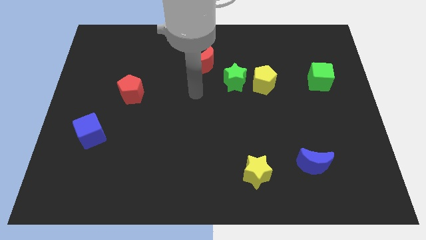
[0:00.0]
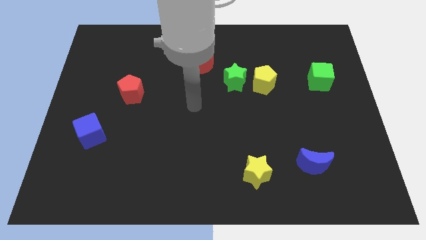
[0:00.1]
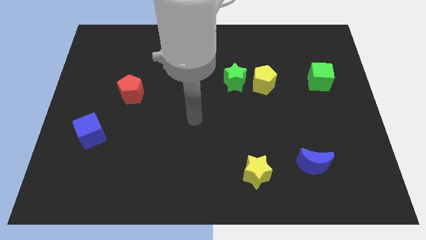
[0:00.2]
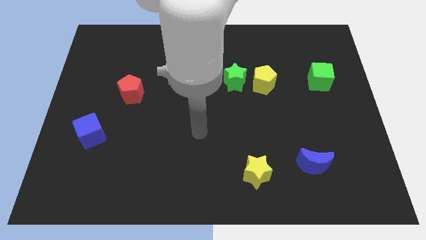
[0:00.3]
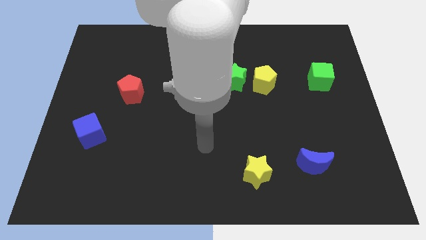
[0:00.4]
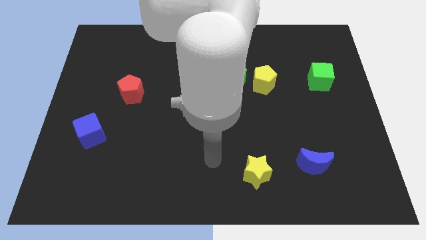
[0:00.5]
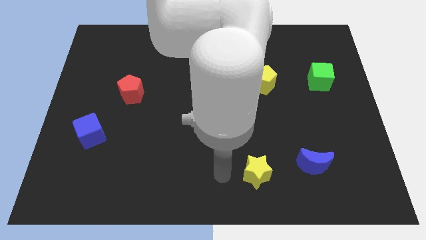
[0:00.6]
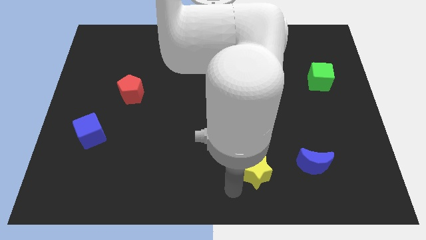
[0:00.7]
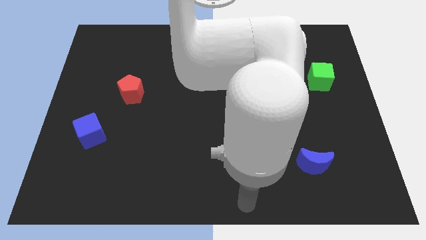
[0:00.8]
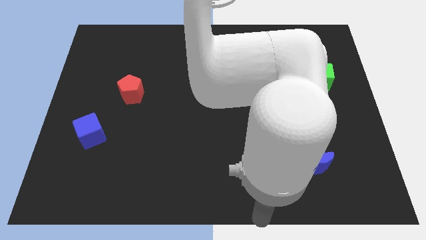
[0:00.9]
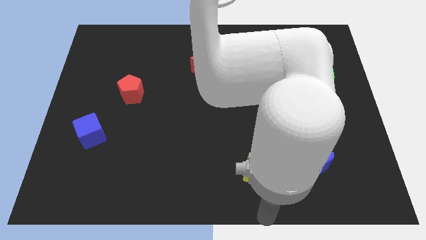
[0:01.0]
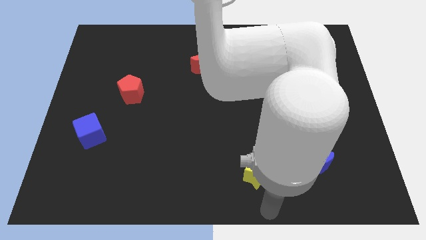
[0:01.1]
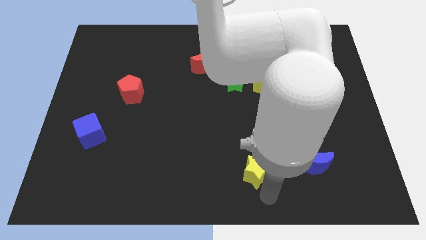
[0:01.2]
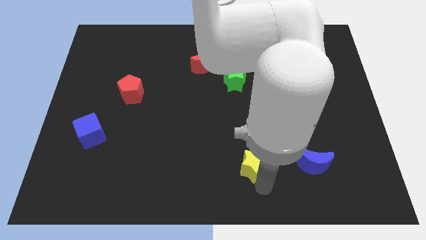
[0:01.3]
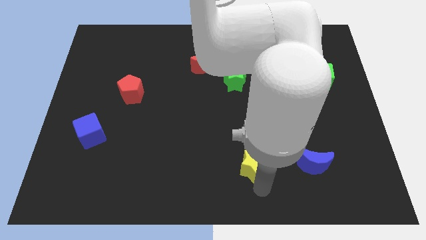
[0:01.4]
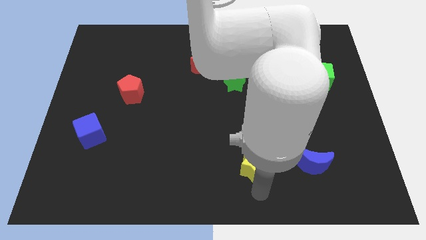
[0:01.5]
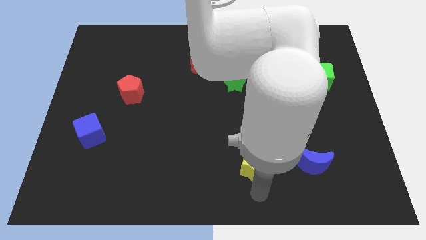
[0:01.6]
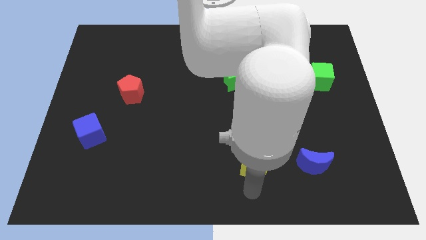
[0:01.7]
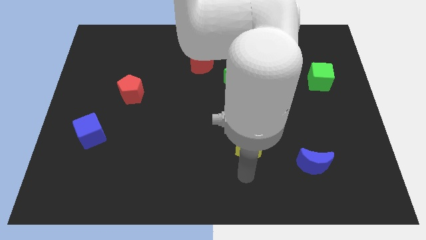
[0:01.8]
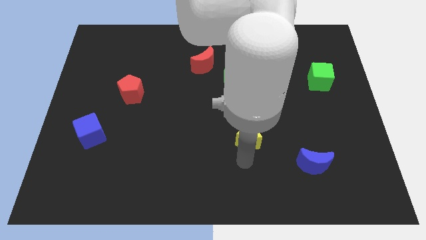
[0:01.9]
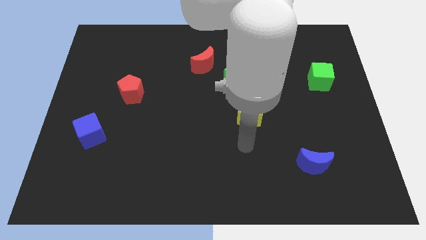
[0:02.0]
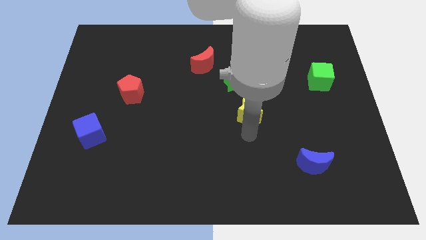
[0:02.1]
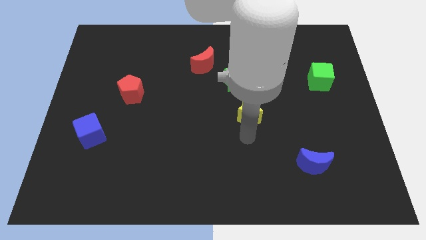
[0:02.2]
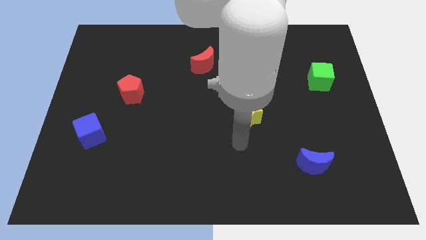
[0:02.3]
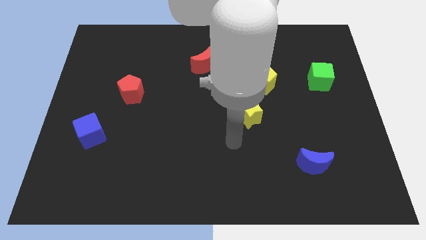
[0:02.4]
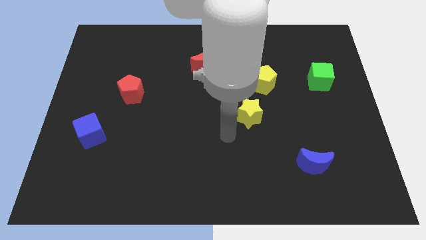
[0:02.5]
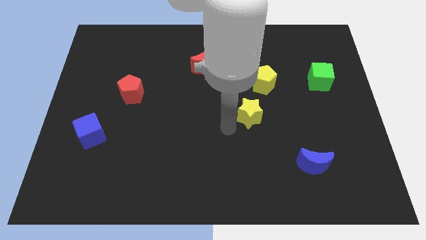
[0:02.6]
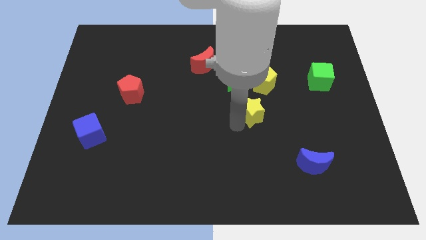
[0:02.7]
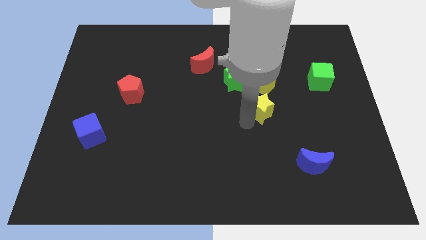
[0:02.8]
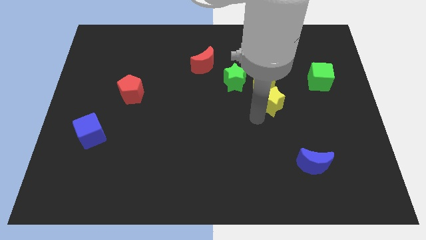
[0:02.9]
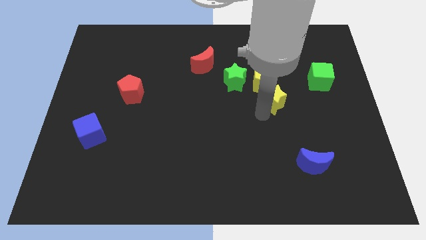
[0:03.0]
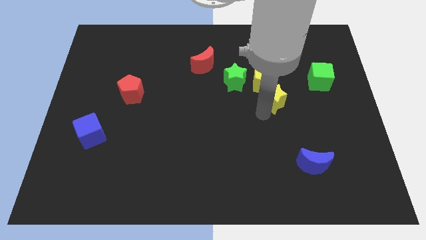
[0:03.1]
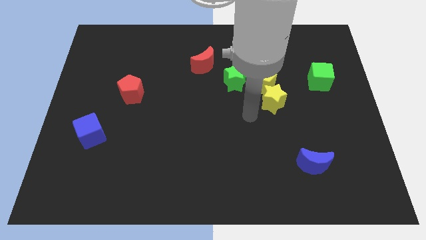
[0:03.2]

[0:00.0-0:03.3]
push the yellow star to the bottom right side of the yellow pentagon

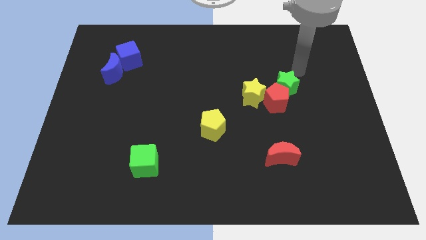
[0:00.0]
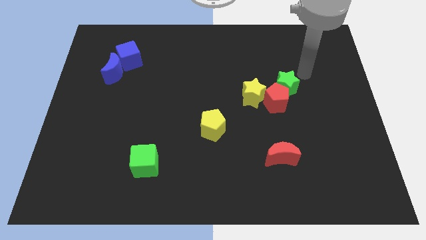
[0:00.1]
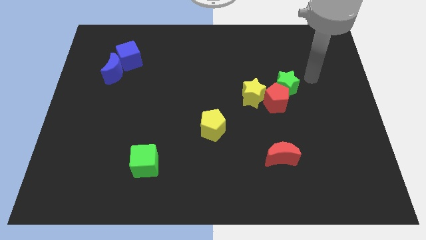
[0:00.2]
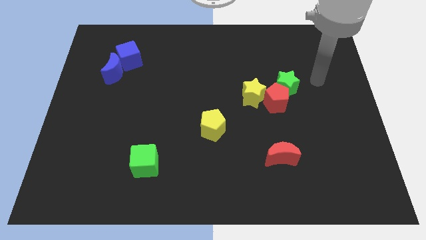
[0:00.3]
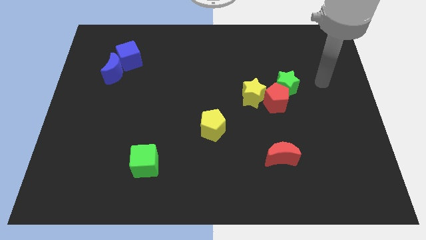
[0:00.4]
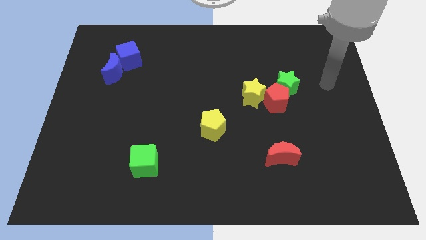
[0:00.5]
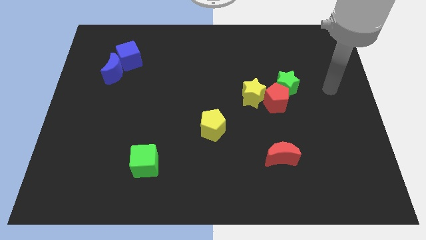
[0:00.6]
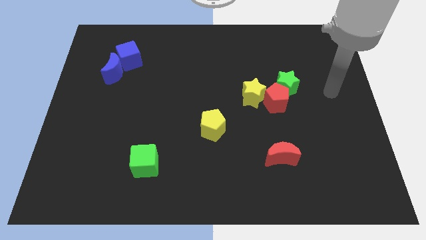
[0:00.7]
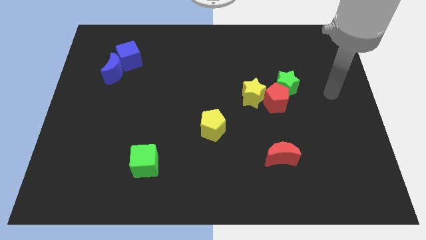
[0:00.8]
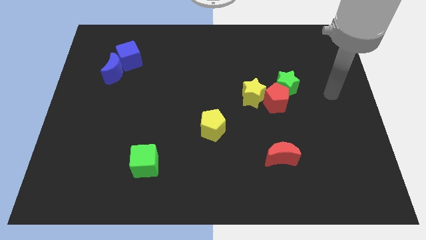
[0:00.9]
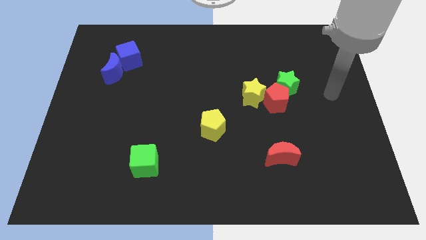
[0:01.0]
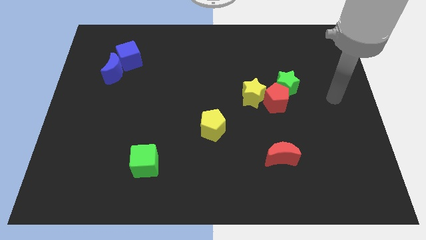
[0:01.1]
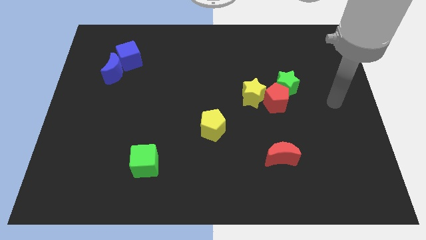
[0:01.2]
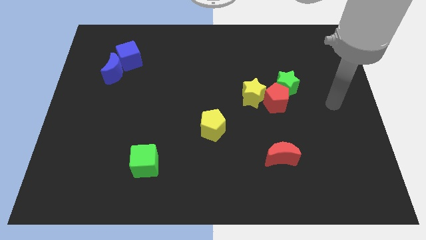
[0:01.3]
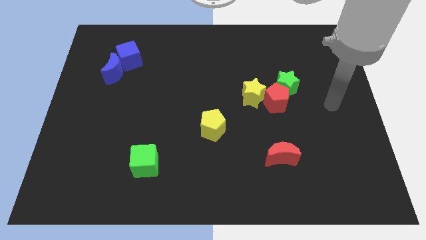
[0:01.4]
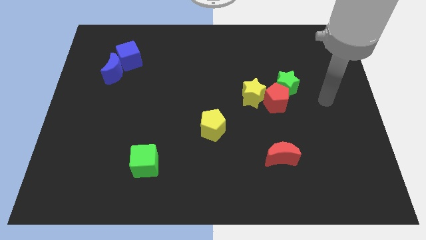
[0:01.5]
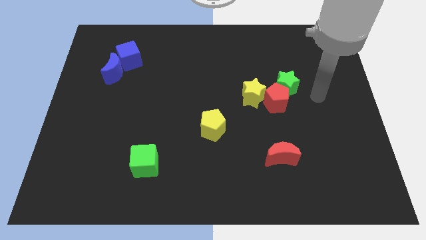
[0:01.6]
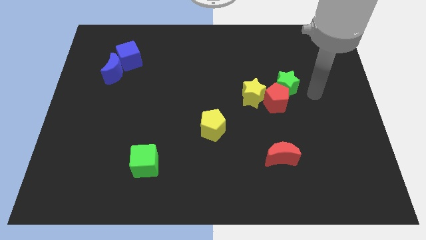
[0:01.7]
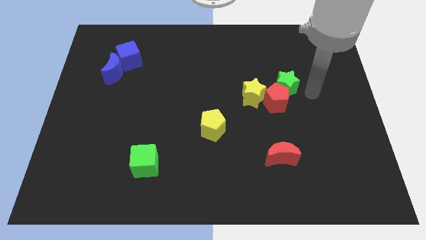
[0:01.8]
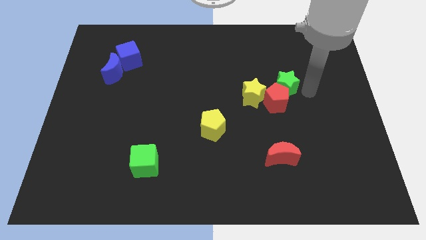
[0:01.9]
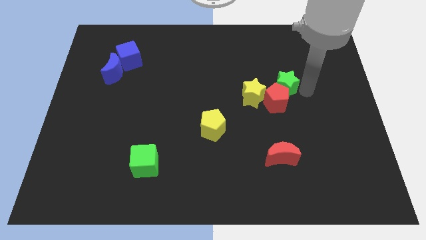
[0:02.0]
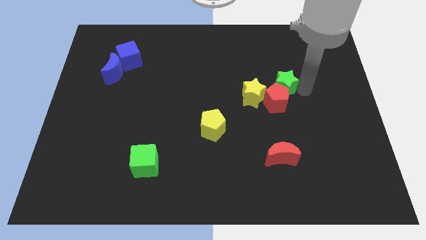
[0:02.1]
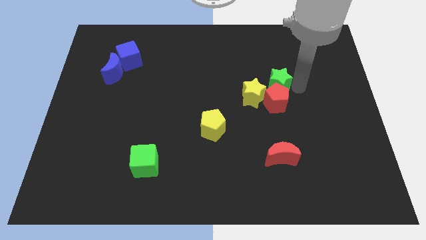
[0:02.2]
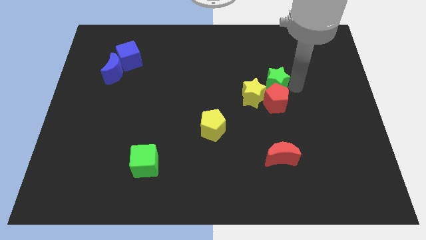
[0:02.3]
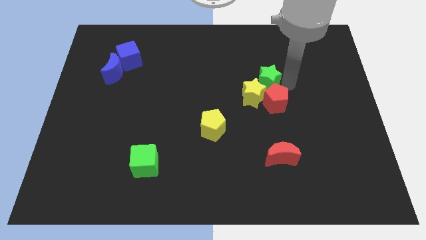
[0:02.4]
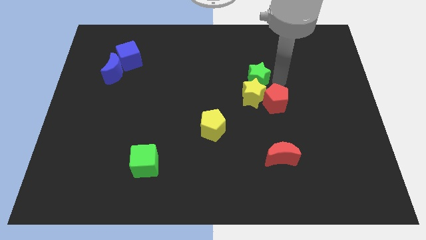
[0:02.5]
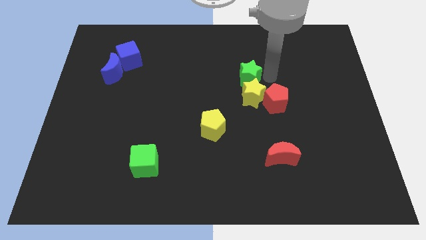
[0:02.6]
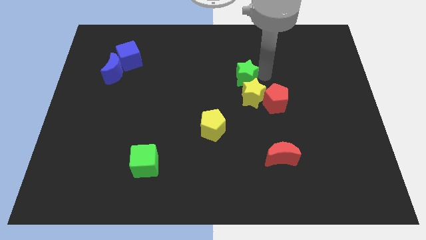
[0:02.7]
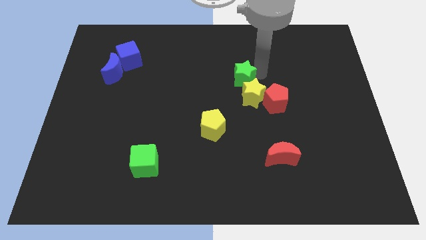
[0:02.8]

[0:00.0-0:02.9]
place the green star above the yellow star

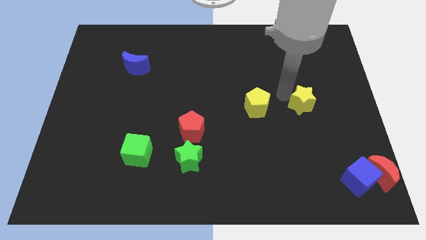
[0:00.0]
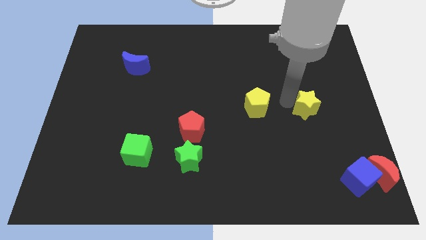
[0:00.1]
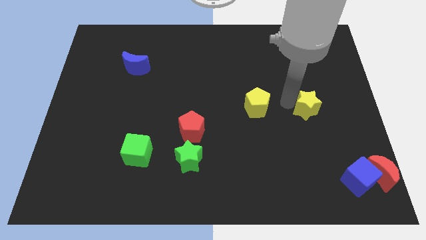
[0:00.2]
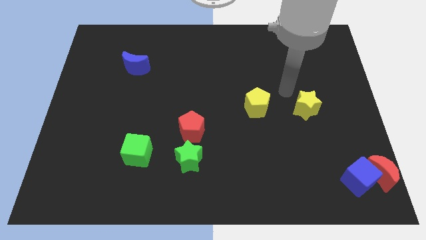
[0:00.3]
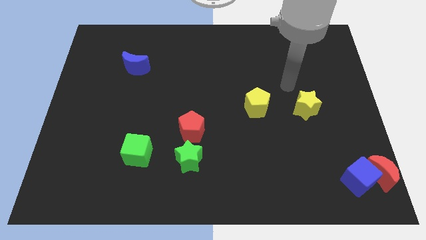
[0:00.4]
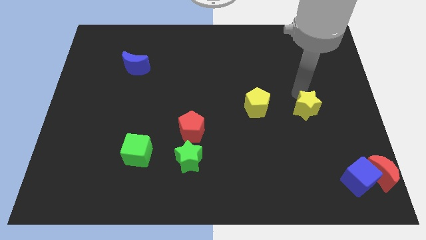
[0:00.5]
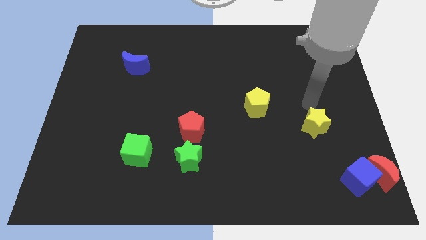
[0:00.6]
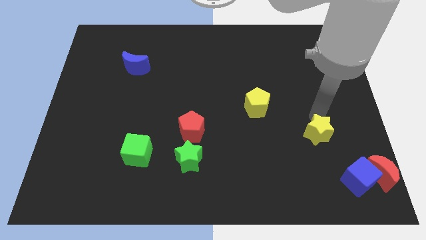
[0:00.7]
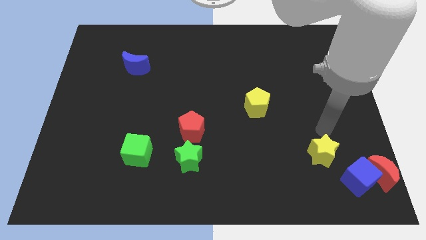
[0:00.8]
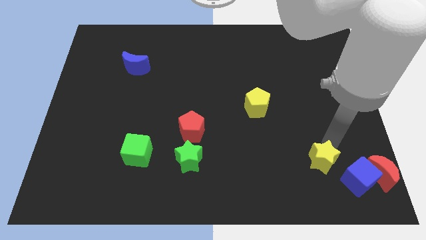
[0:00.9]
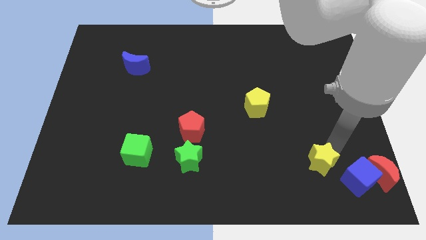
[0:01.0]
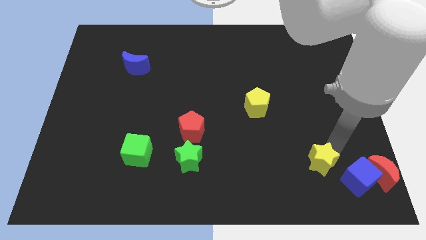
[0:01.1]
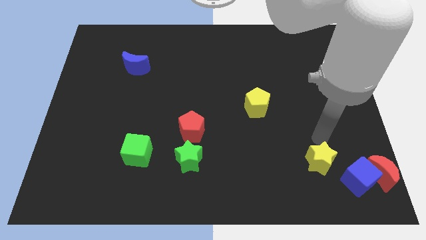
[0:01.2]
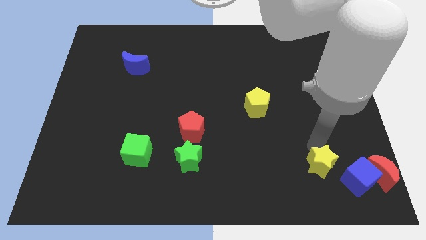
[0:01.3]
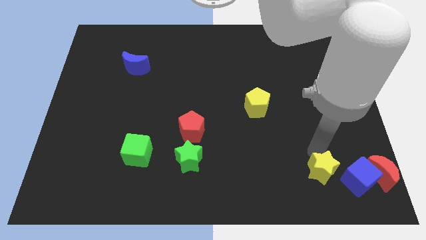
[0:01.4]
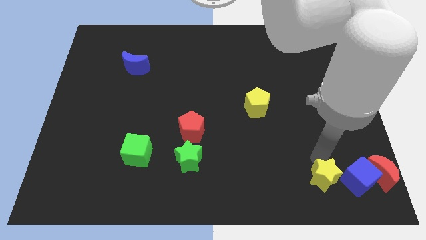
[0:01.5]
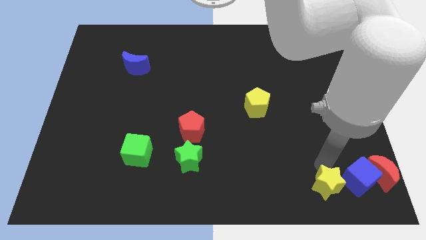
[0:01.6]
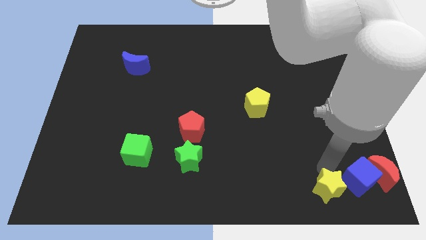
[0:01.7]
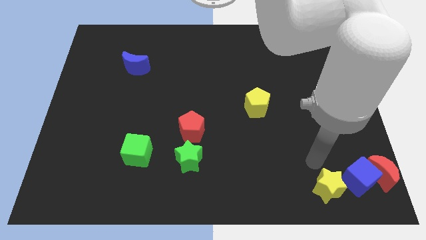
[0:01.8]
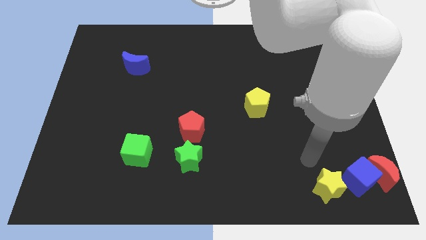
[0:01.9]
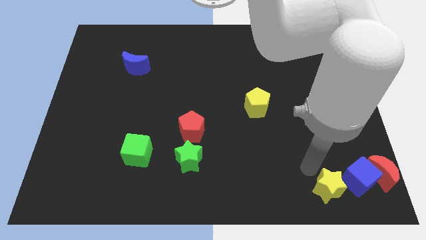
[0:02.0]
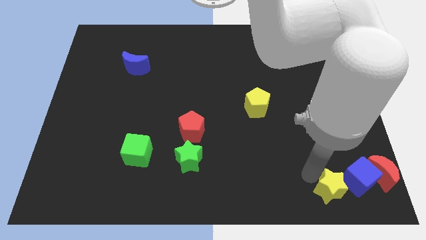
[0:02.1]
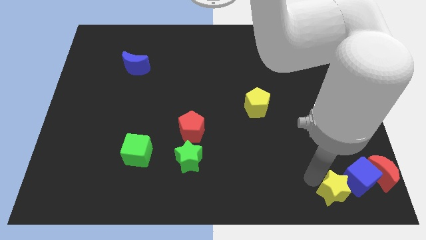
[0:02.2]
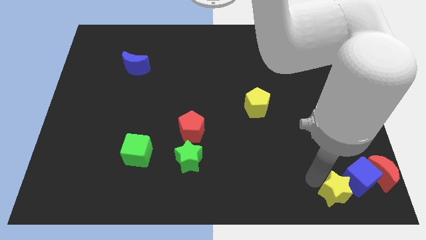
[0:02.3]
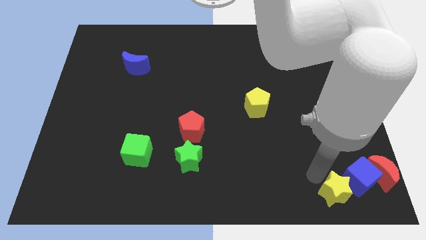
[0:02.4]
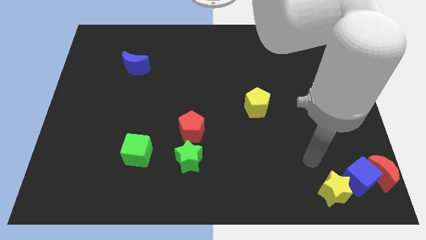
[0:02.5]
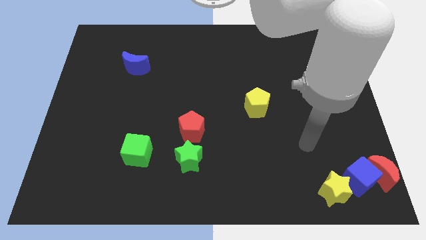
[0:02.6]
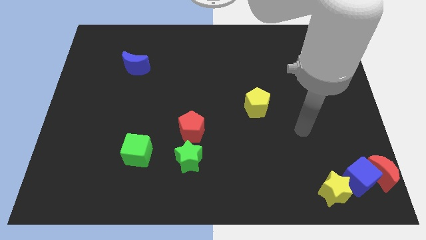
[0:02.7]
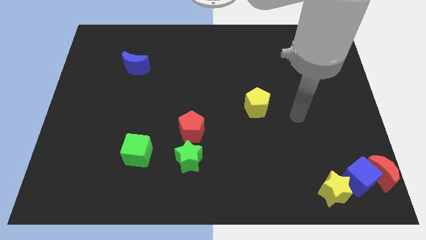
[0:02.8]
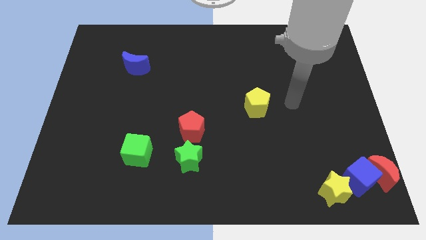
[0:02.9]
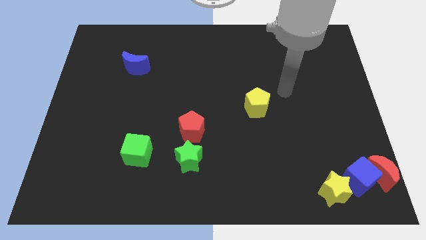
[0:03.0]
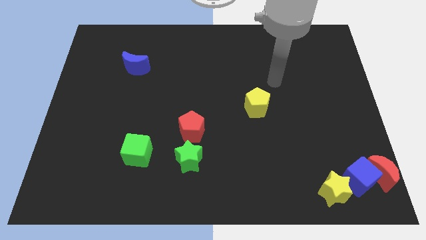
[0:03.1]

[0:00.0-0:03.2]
push the yellow star towards the left side of the blue cube
